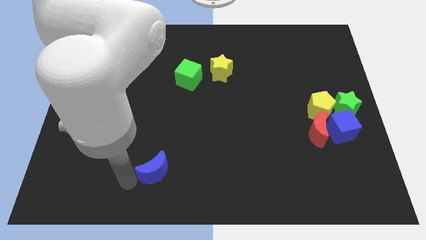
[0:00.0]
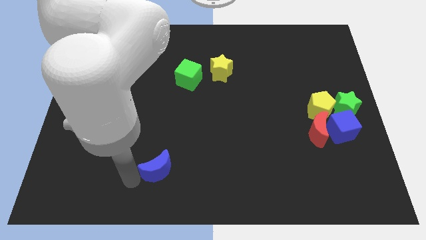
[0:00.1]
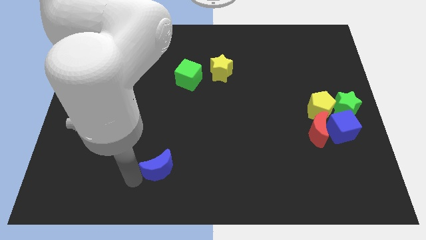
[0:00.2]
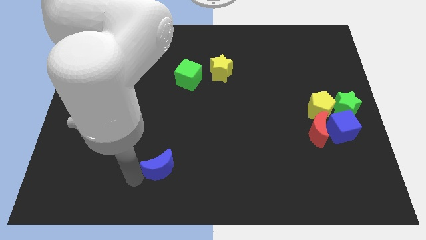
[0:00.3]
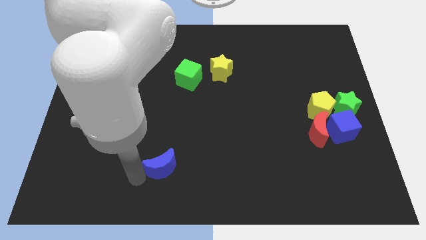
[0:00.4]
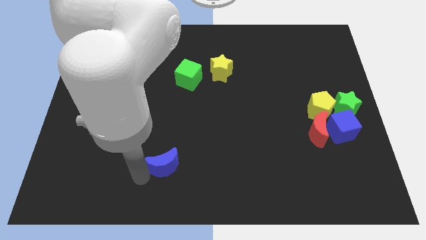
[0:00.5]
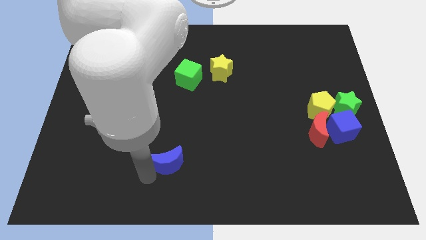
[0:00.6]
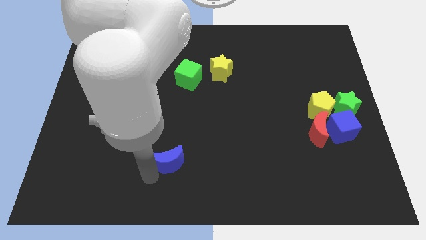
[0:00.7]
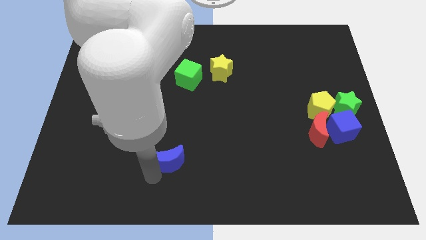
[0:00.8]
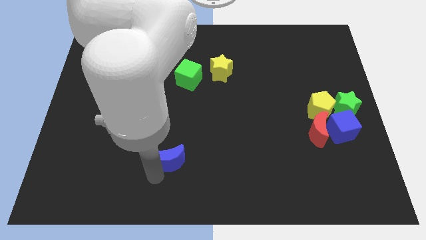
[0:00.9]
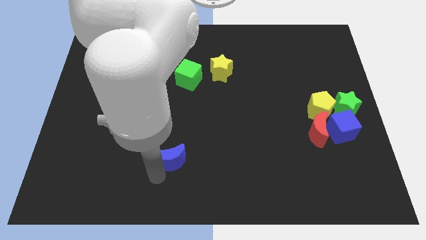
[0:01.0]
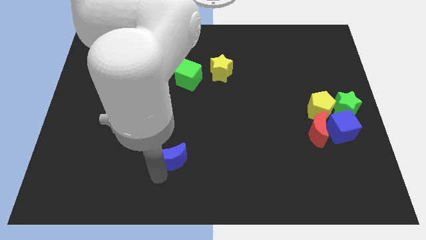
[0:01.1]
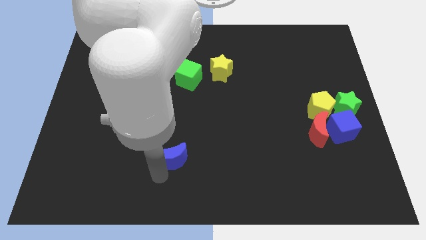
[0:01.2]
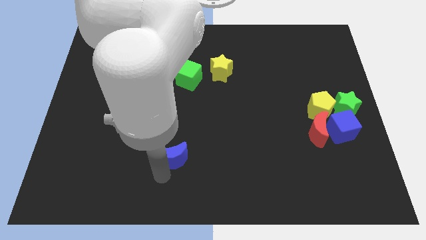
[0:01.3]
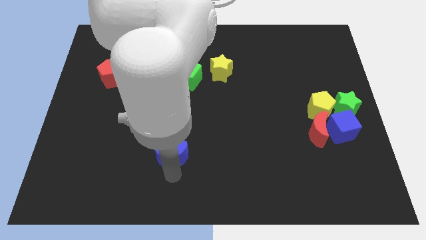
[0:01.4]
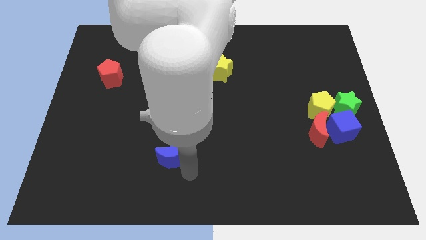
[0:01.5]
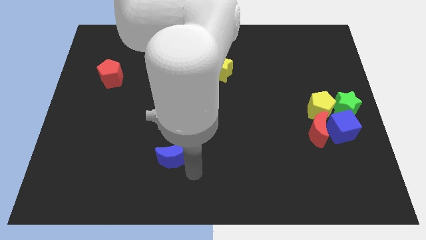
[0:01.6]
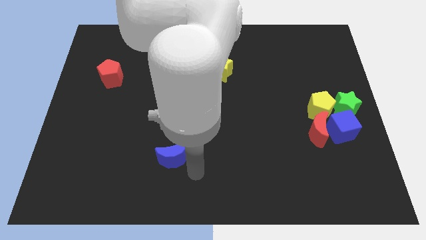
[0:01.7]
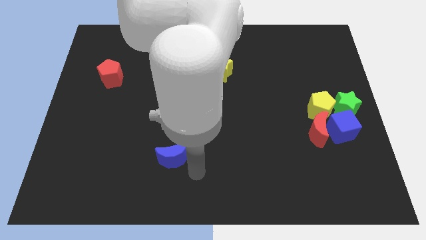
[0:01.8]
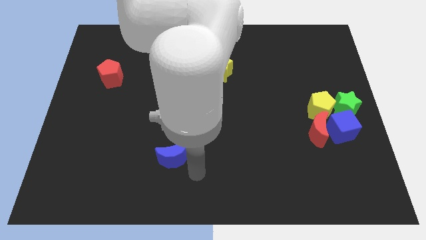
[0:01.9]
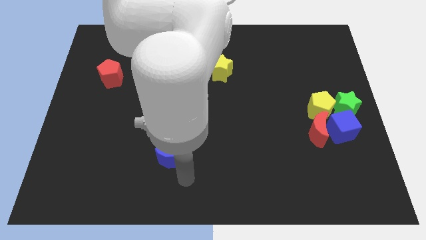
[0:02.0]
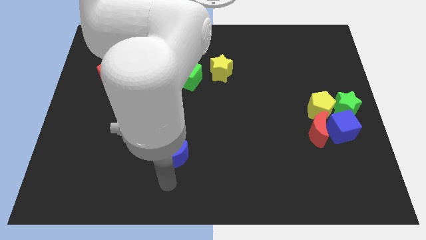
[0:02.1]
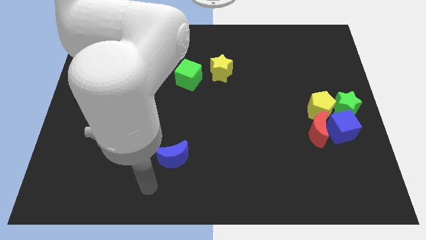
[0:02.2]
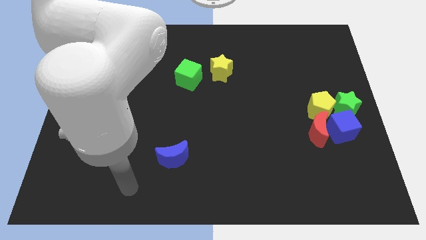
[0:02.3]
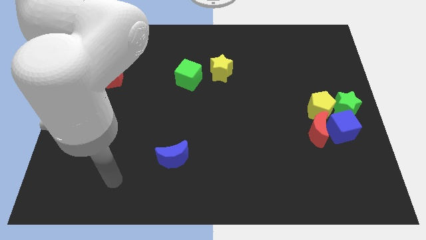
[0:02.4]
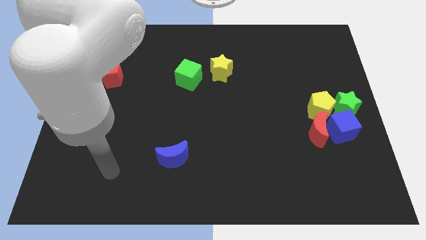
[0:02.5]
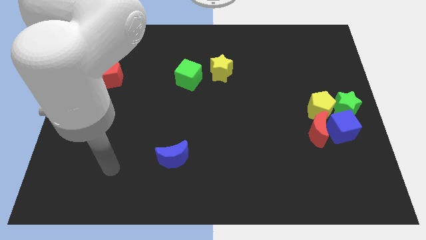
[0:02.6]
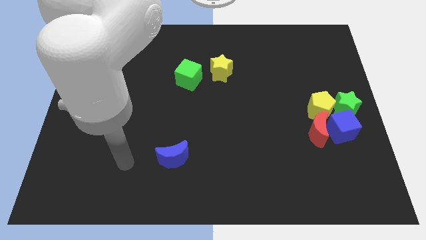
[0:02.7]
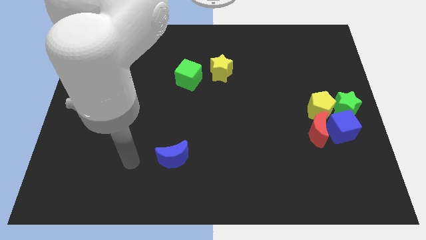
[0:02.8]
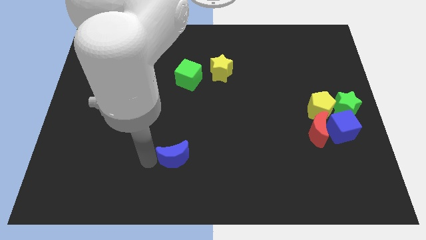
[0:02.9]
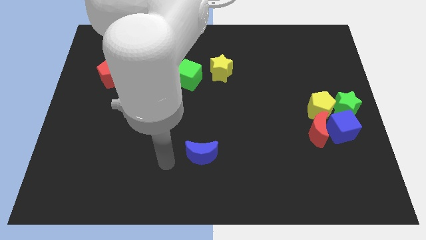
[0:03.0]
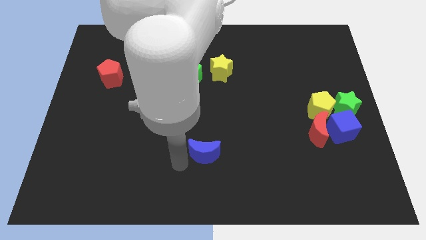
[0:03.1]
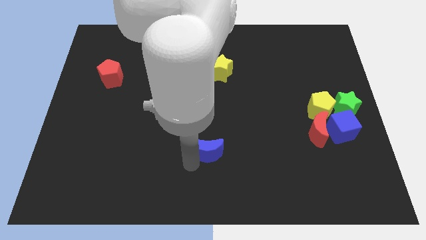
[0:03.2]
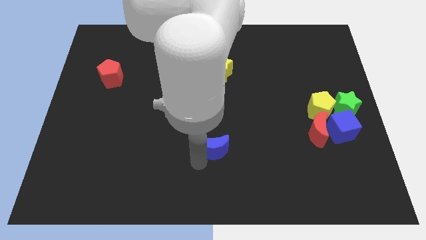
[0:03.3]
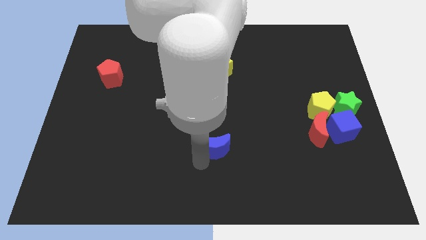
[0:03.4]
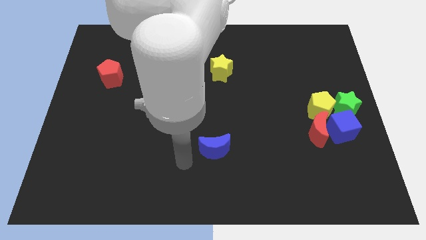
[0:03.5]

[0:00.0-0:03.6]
push the blue moon vertically at the bottom side of the yellow star

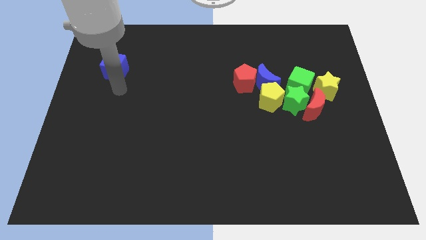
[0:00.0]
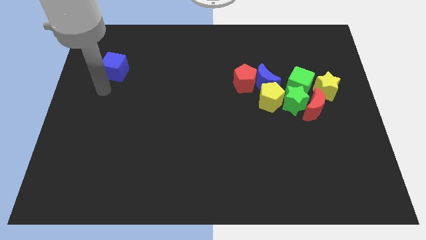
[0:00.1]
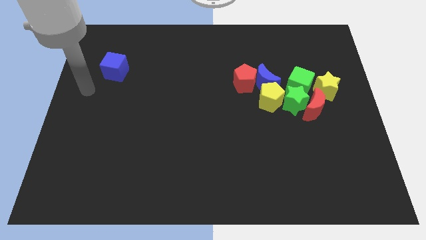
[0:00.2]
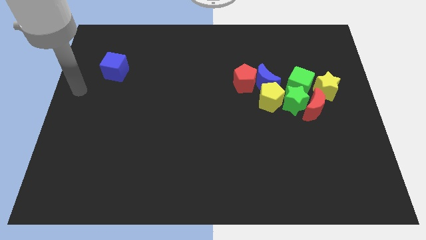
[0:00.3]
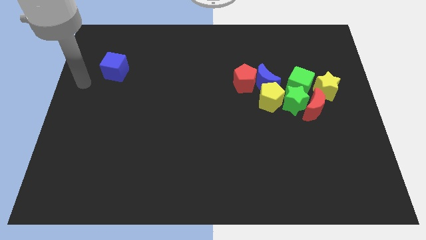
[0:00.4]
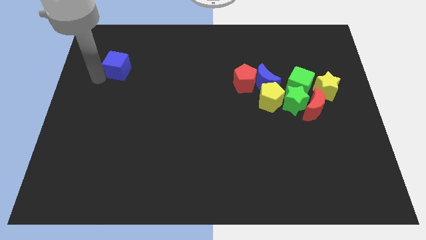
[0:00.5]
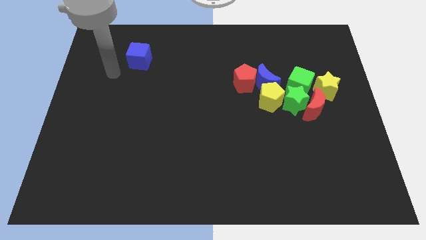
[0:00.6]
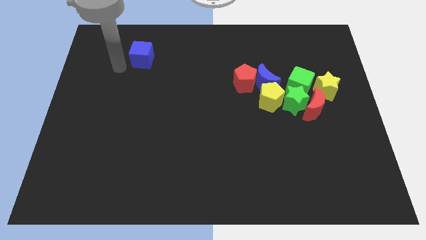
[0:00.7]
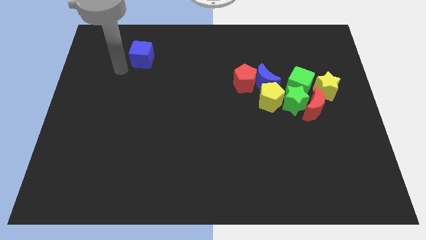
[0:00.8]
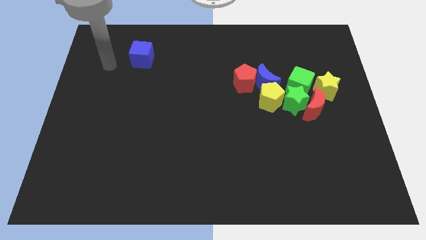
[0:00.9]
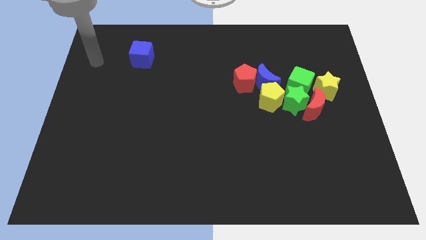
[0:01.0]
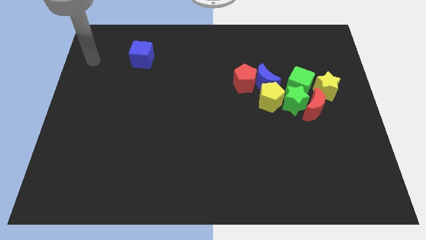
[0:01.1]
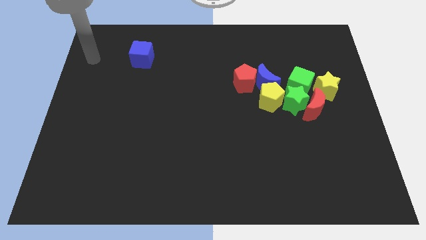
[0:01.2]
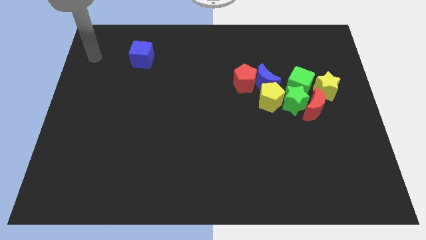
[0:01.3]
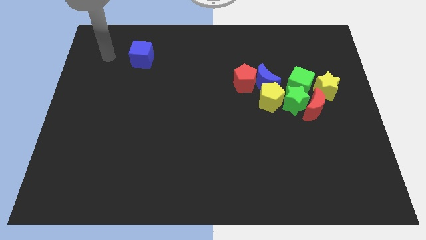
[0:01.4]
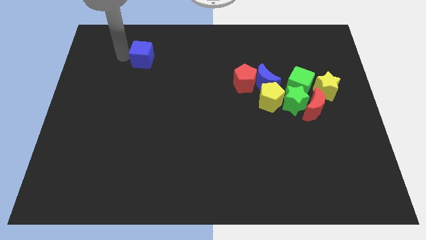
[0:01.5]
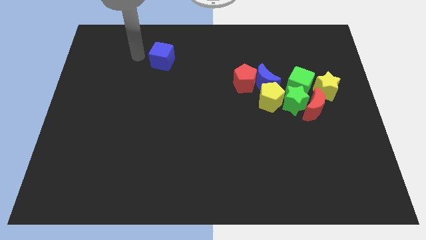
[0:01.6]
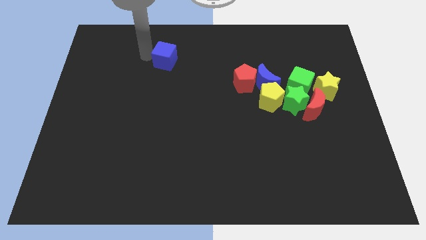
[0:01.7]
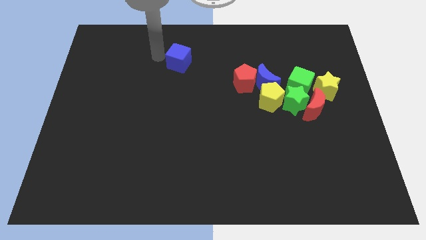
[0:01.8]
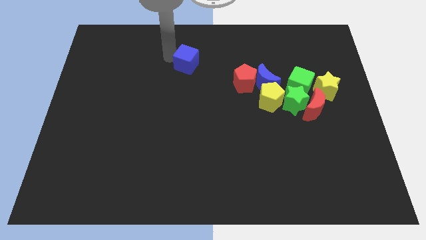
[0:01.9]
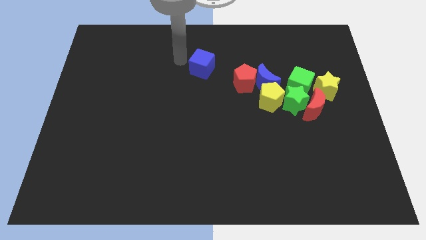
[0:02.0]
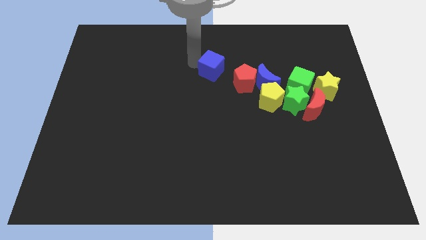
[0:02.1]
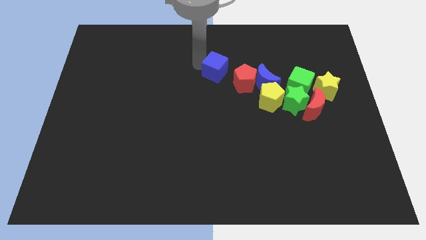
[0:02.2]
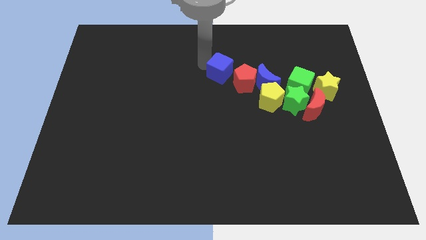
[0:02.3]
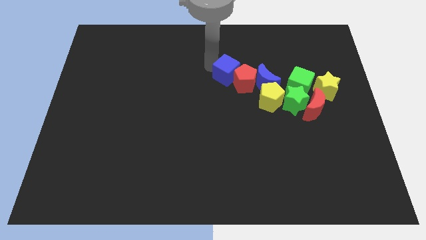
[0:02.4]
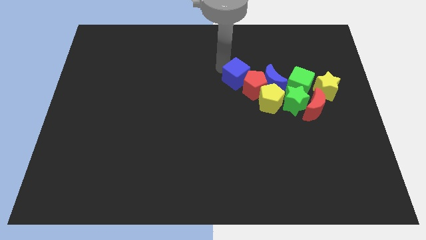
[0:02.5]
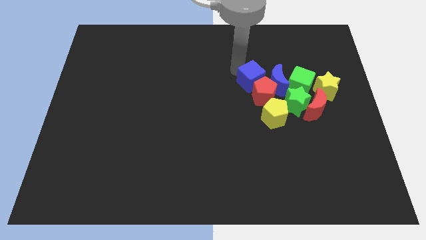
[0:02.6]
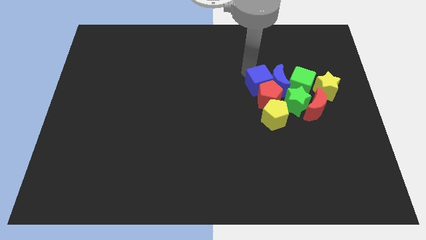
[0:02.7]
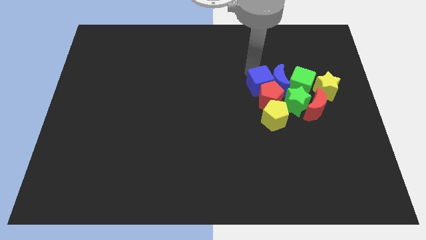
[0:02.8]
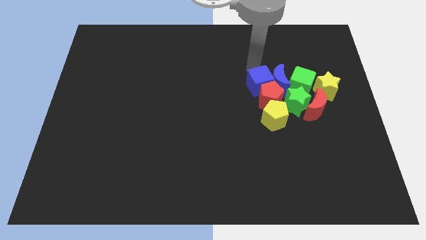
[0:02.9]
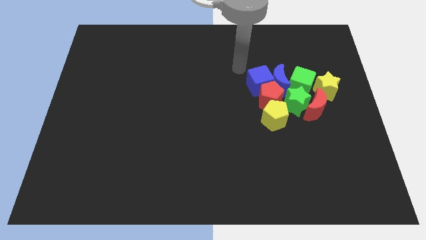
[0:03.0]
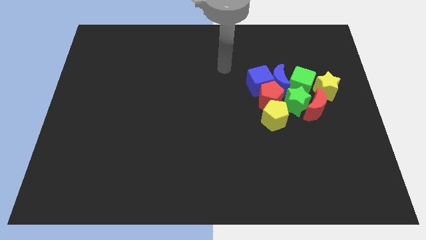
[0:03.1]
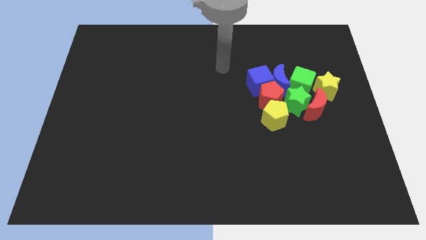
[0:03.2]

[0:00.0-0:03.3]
move the blue cube into the group of blocks

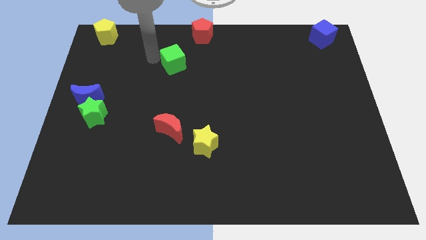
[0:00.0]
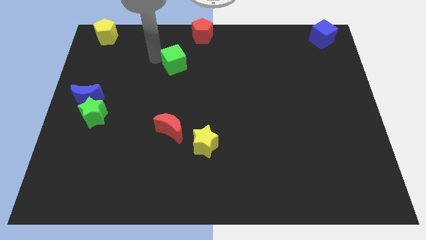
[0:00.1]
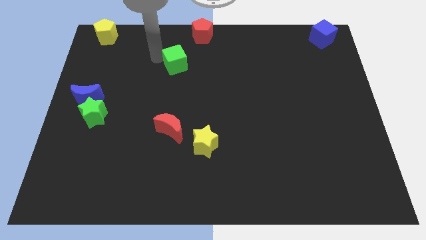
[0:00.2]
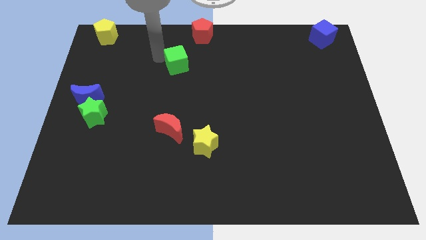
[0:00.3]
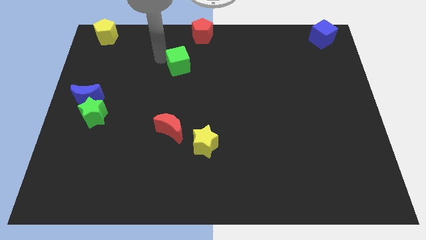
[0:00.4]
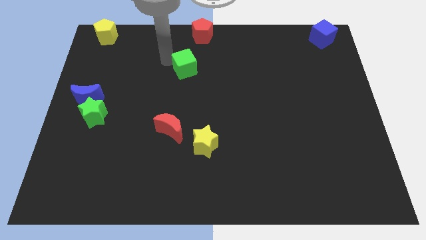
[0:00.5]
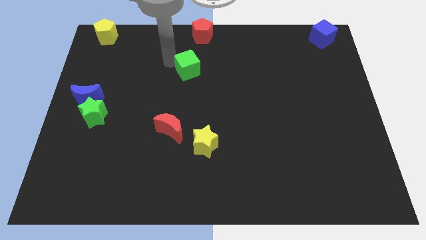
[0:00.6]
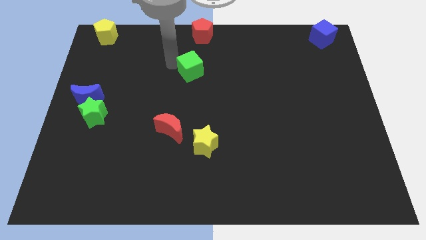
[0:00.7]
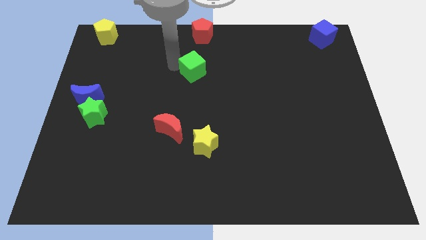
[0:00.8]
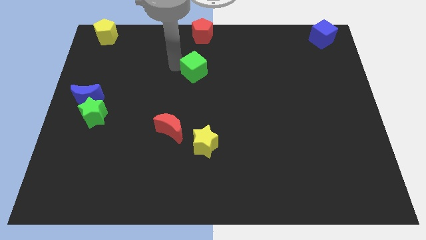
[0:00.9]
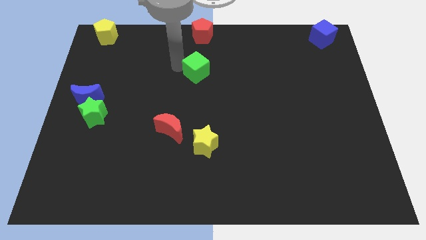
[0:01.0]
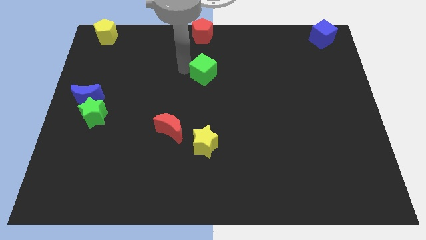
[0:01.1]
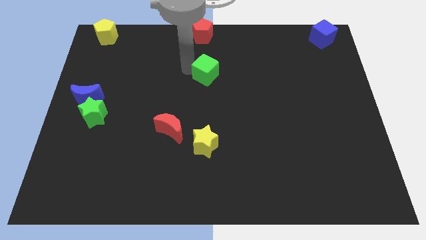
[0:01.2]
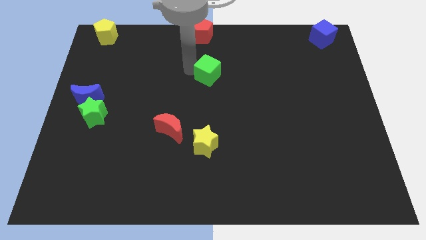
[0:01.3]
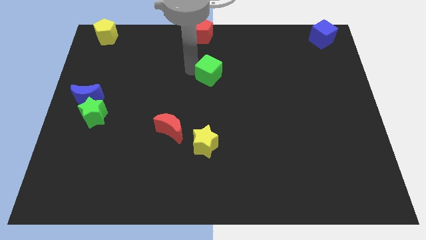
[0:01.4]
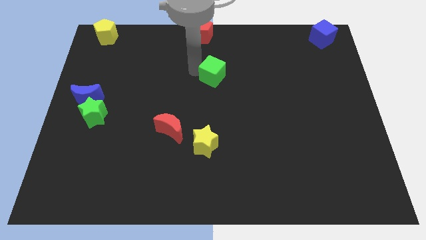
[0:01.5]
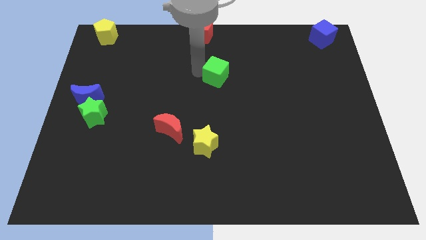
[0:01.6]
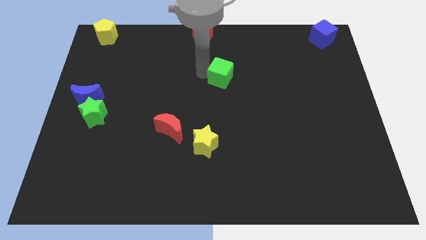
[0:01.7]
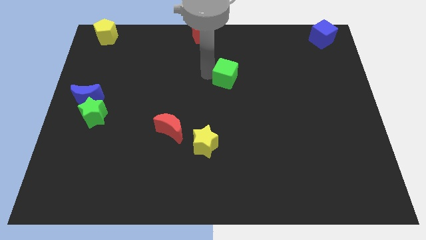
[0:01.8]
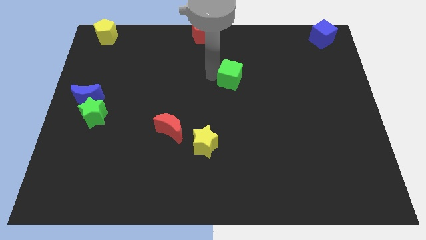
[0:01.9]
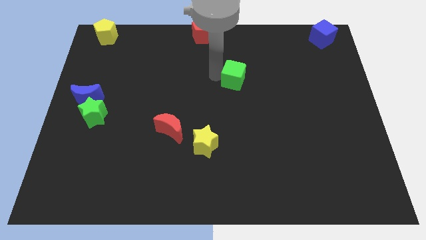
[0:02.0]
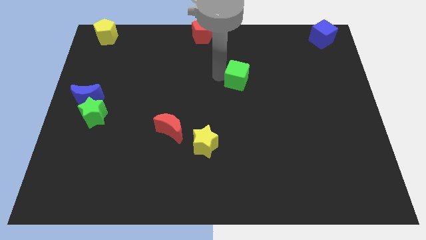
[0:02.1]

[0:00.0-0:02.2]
move the green cube towards right
